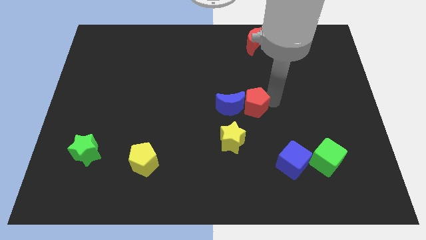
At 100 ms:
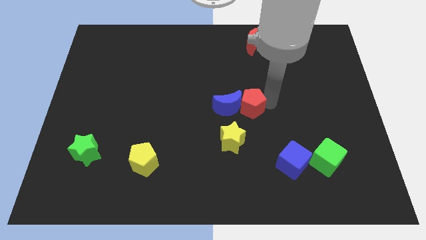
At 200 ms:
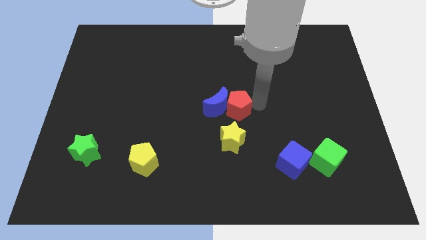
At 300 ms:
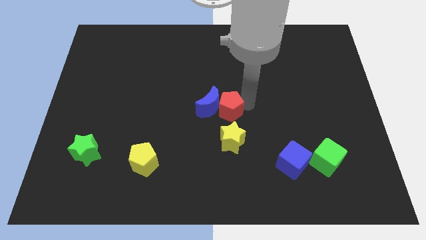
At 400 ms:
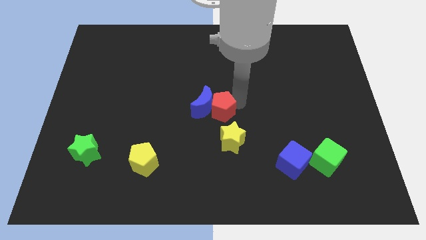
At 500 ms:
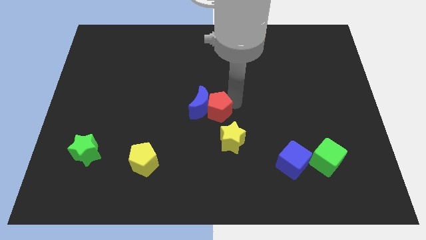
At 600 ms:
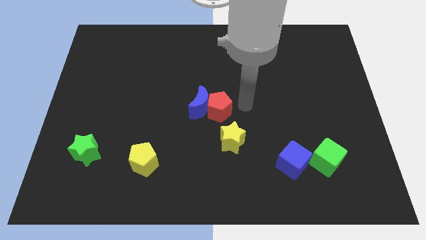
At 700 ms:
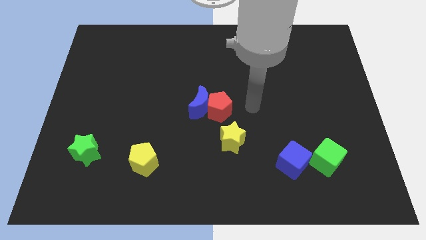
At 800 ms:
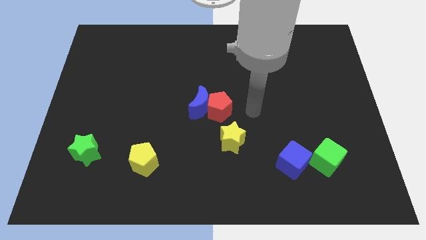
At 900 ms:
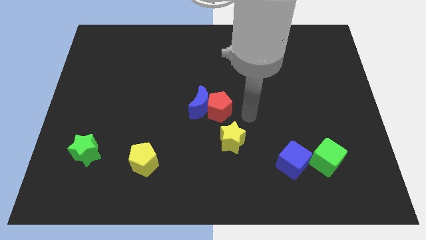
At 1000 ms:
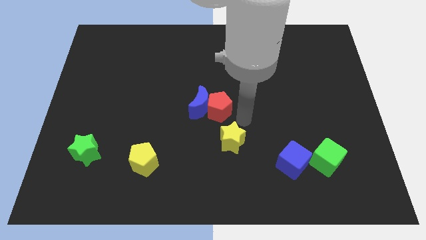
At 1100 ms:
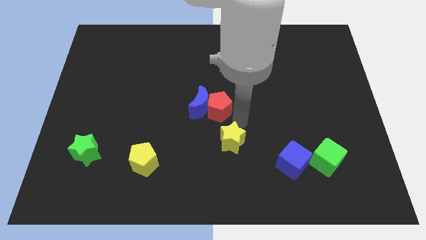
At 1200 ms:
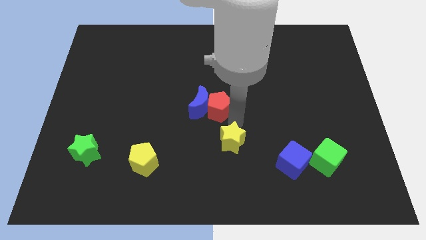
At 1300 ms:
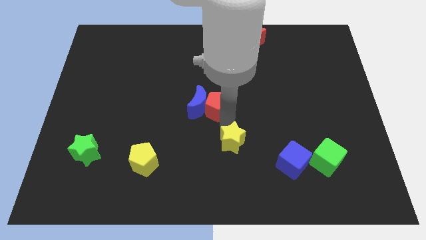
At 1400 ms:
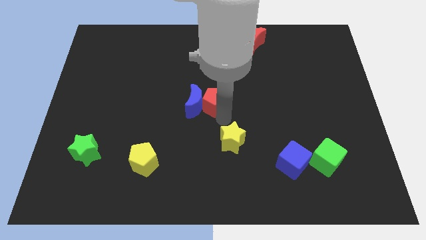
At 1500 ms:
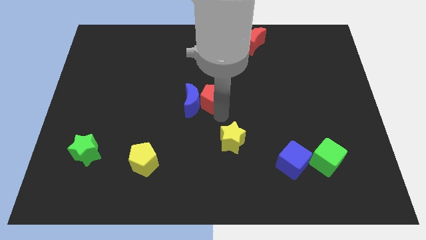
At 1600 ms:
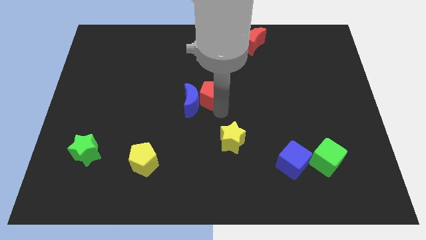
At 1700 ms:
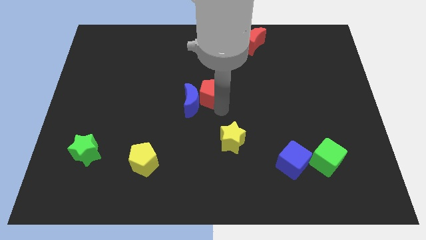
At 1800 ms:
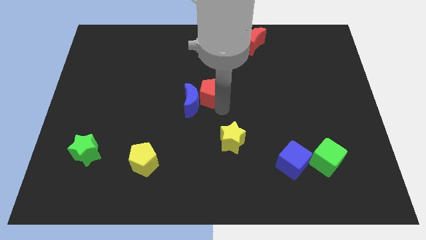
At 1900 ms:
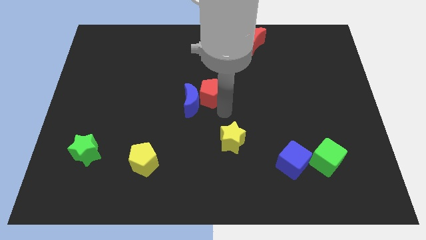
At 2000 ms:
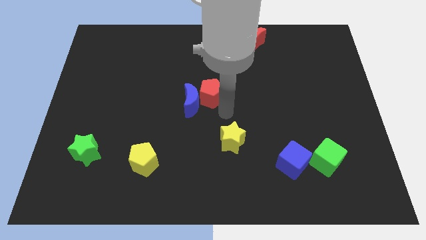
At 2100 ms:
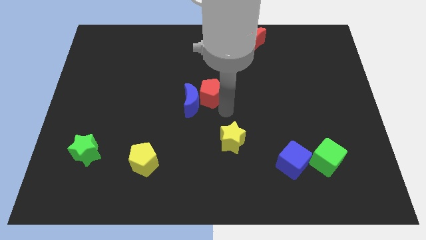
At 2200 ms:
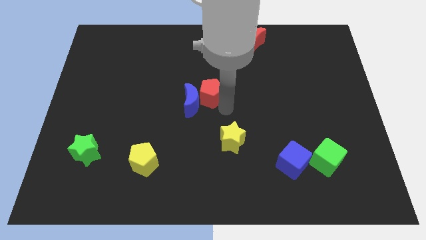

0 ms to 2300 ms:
push the red pentagon and blue crescent slightly right side

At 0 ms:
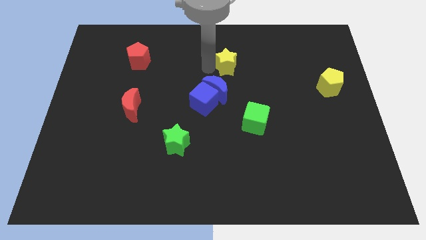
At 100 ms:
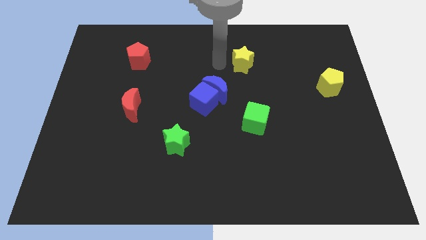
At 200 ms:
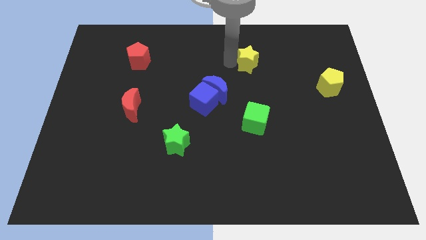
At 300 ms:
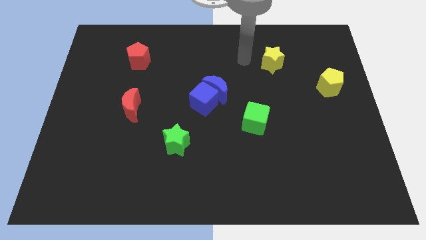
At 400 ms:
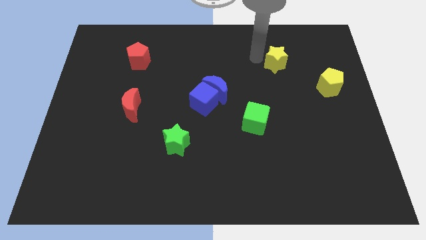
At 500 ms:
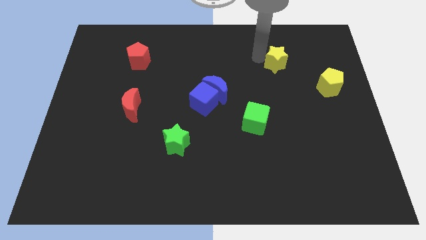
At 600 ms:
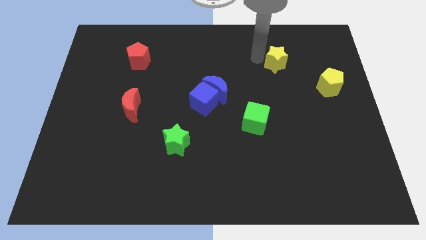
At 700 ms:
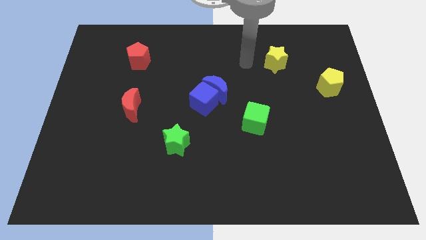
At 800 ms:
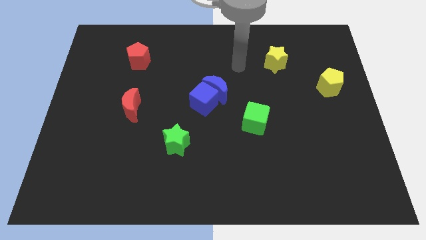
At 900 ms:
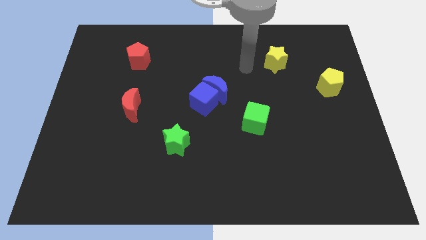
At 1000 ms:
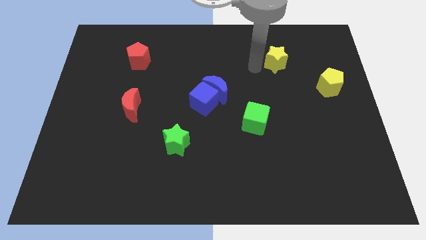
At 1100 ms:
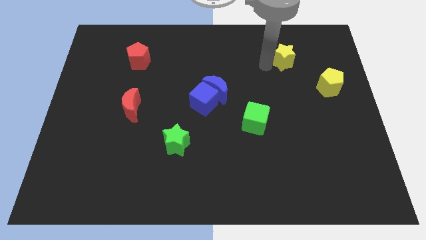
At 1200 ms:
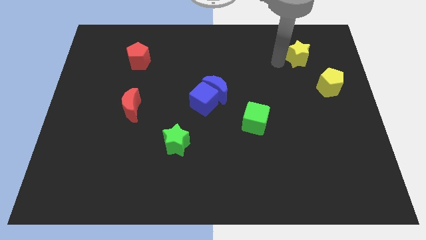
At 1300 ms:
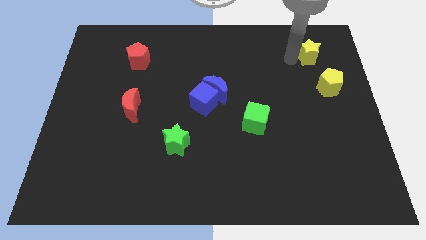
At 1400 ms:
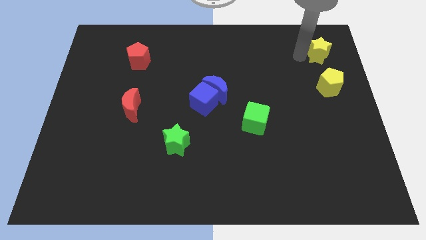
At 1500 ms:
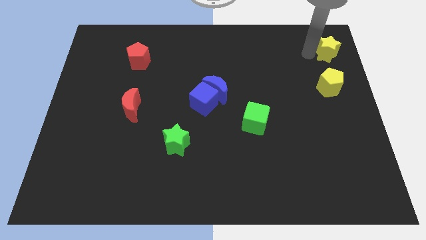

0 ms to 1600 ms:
move the yellow star above the yellow pentagon

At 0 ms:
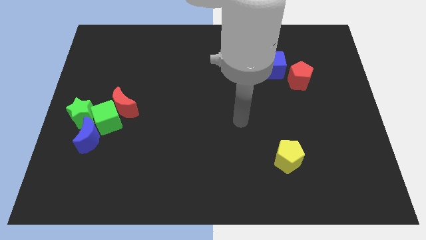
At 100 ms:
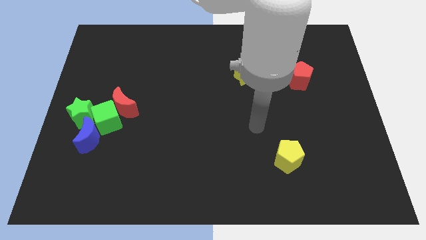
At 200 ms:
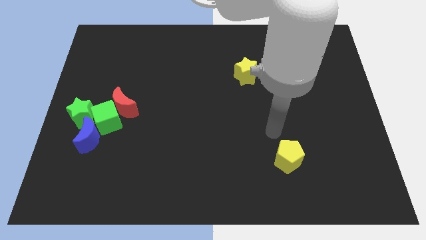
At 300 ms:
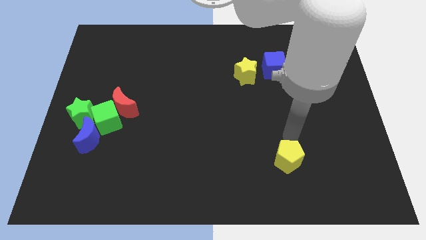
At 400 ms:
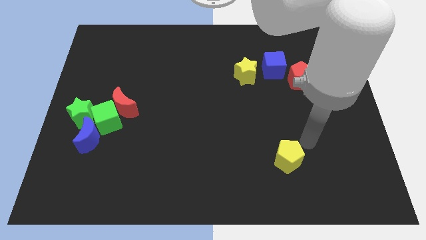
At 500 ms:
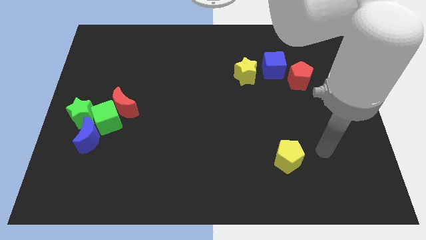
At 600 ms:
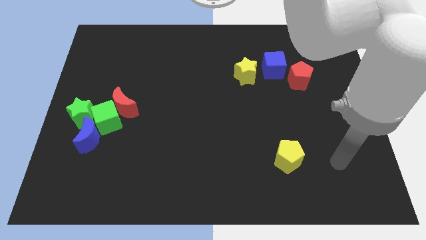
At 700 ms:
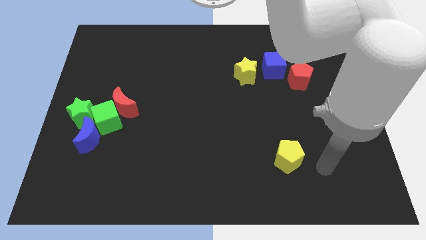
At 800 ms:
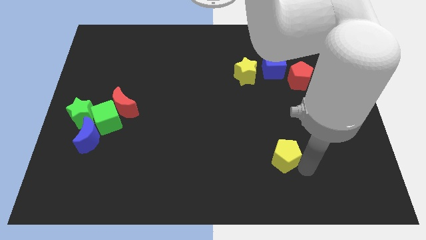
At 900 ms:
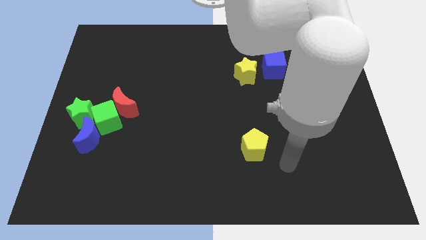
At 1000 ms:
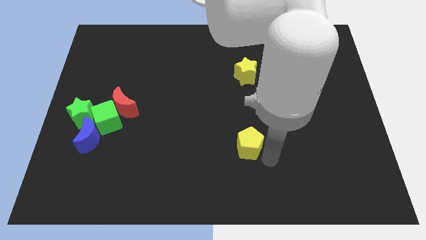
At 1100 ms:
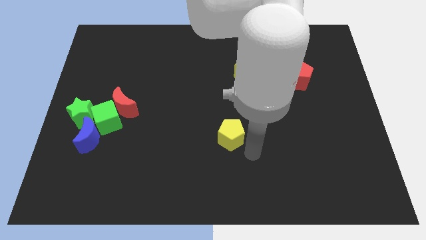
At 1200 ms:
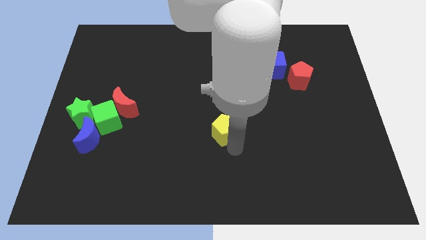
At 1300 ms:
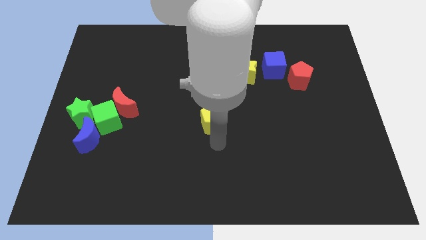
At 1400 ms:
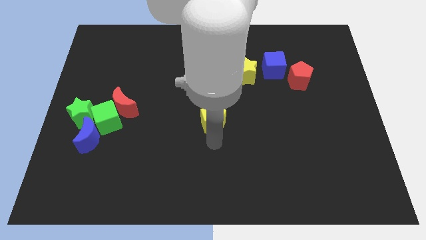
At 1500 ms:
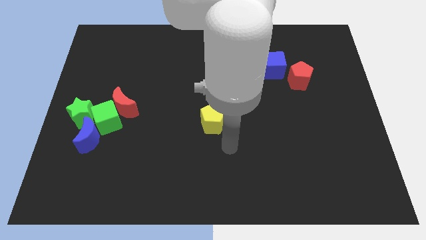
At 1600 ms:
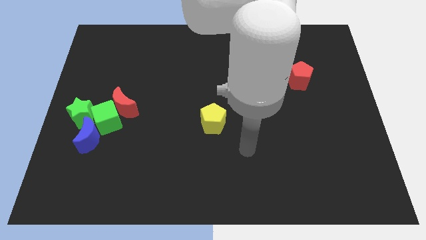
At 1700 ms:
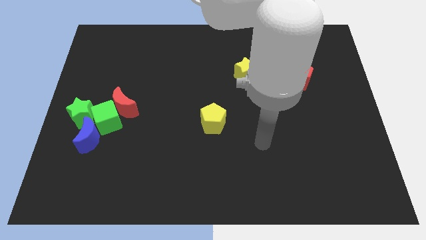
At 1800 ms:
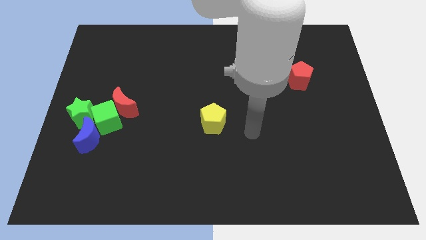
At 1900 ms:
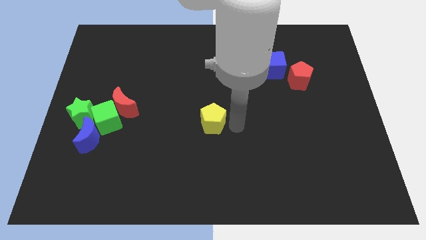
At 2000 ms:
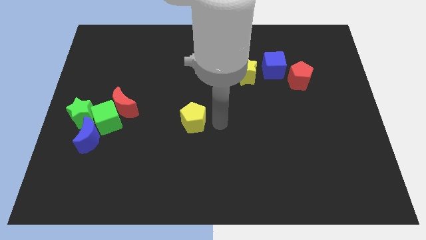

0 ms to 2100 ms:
place the yellow pentagon towards the center of the board

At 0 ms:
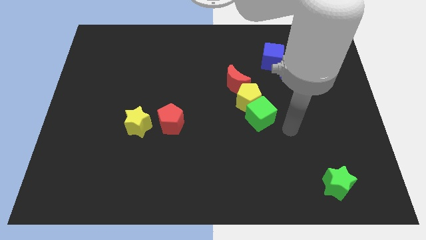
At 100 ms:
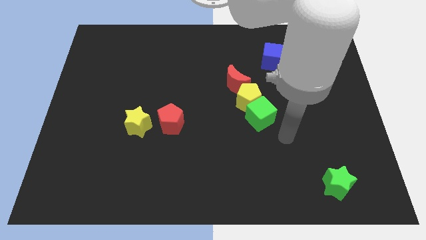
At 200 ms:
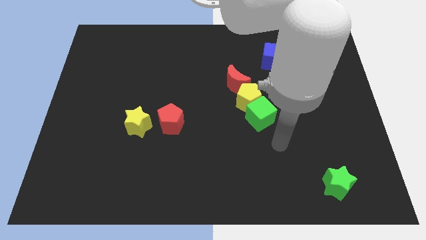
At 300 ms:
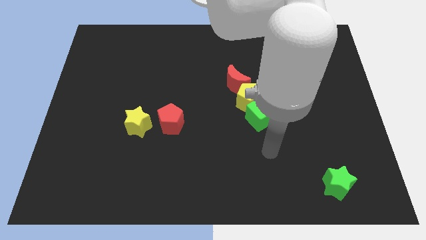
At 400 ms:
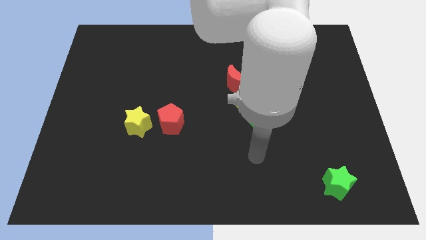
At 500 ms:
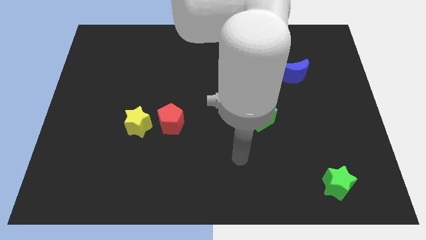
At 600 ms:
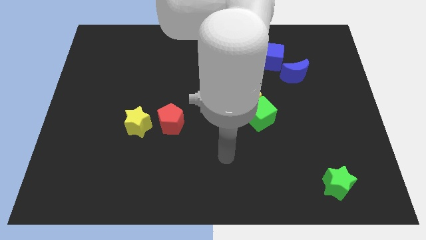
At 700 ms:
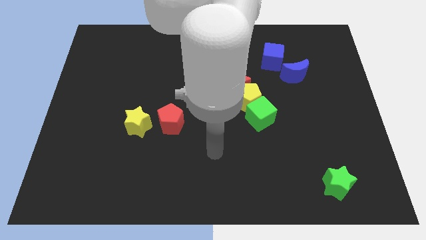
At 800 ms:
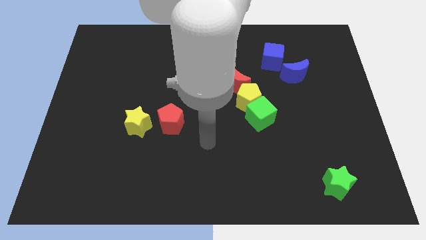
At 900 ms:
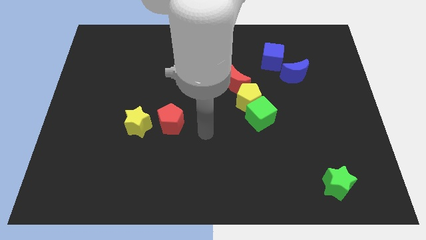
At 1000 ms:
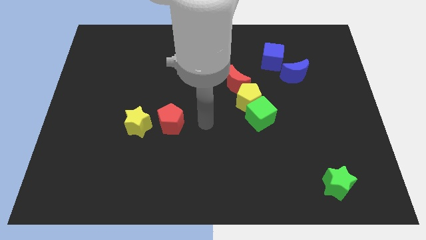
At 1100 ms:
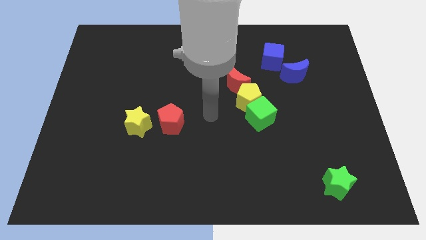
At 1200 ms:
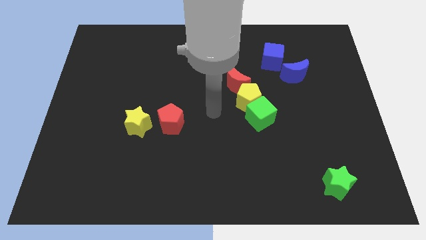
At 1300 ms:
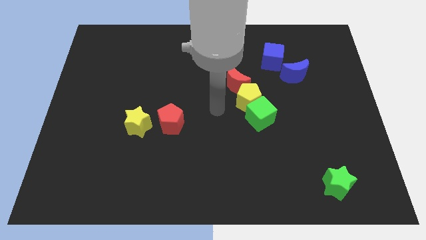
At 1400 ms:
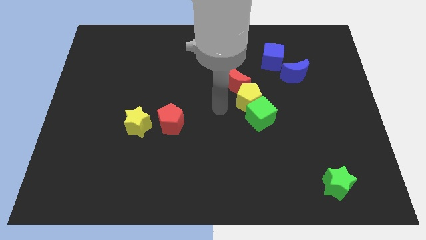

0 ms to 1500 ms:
place your arm at the left of the yellow pentagon

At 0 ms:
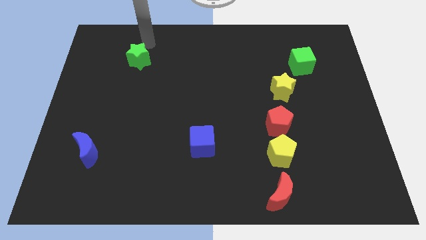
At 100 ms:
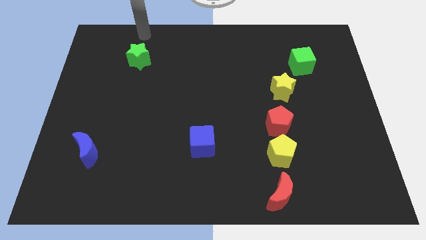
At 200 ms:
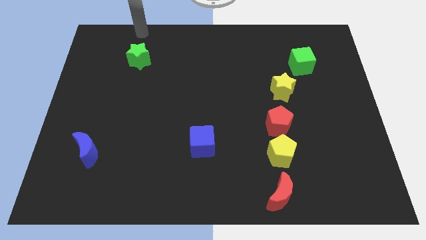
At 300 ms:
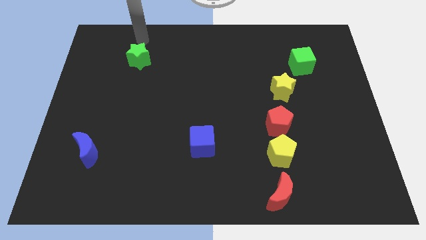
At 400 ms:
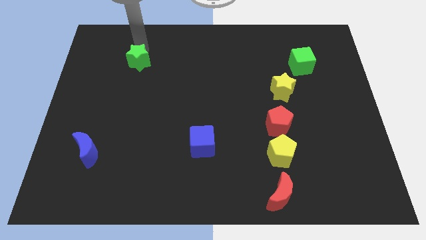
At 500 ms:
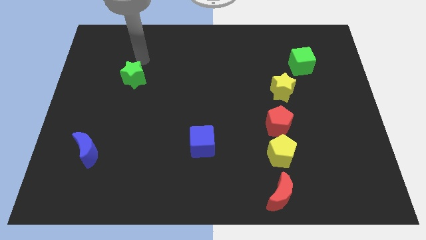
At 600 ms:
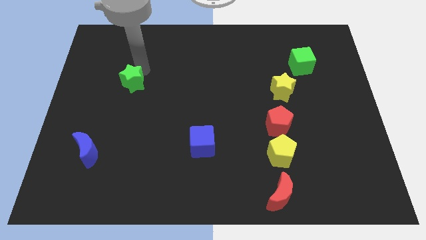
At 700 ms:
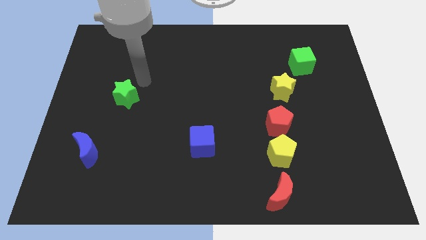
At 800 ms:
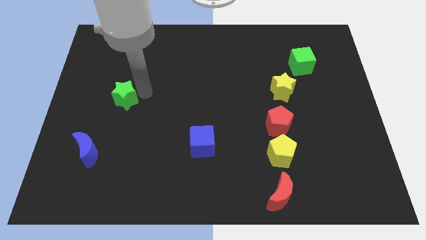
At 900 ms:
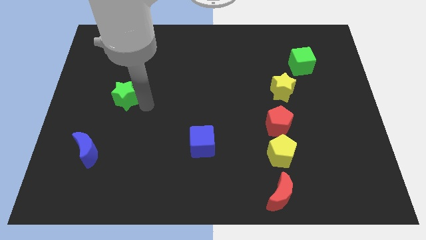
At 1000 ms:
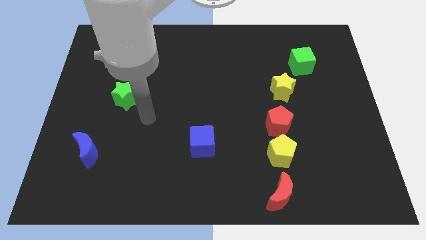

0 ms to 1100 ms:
push green star towards down

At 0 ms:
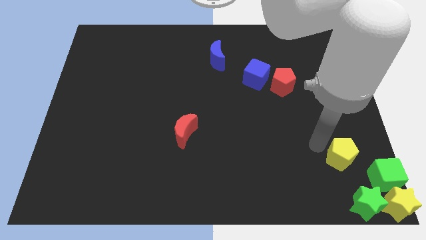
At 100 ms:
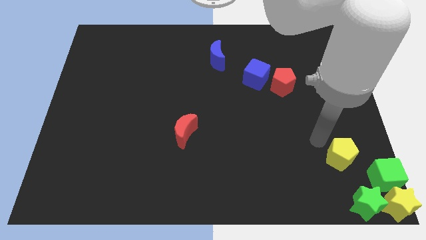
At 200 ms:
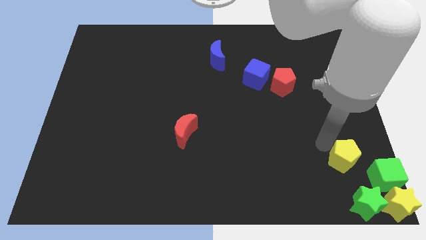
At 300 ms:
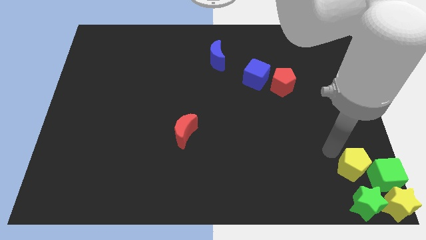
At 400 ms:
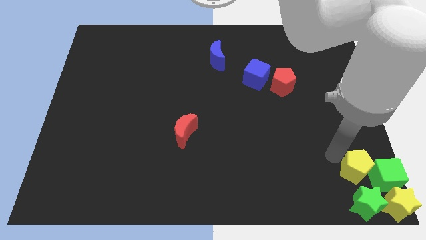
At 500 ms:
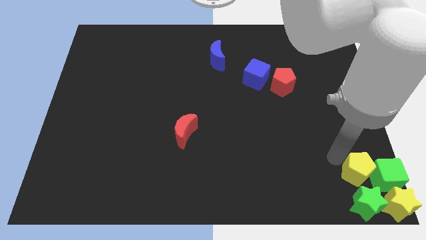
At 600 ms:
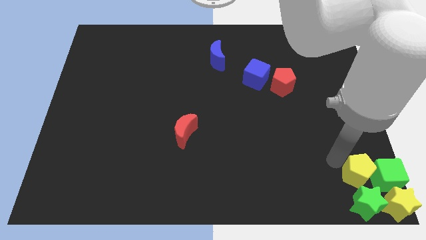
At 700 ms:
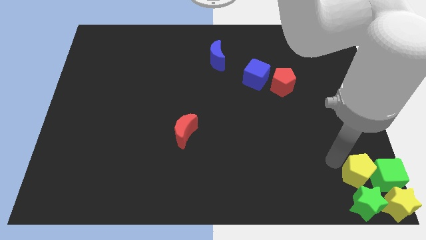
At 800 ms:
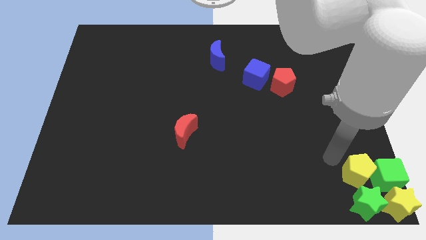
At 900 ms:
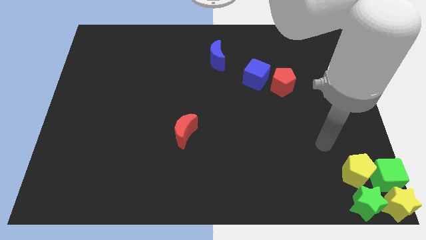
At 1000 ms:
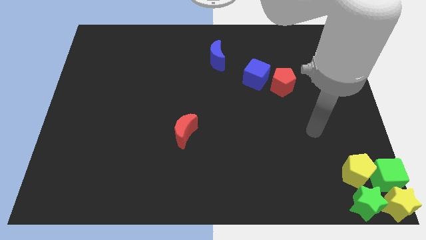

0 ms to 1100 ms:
push the yellow pentagon towards the group of blocks
